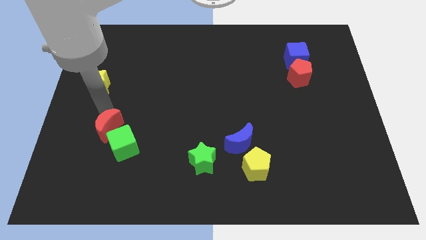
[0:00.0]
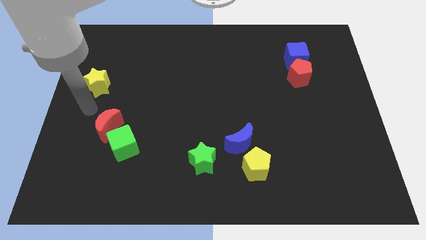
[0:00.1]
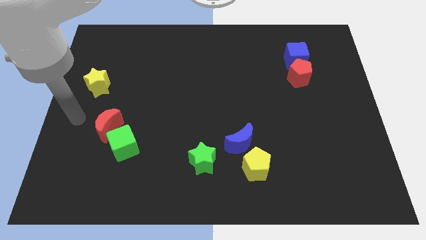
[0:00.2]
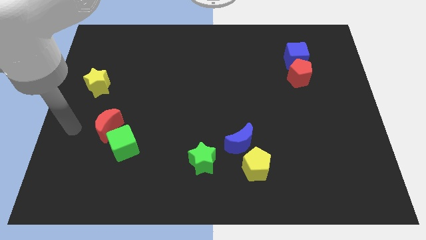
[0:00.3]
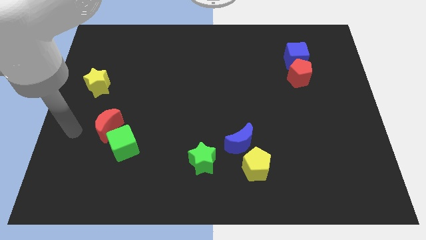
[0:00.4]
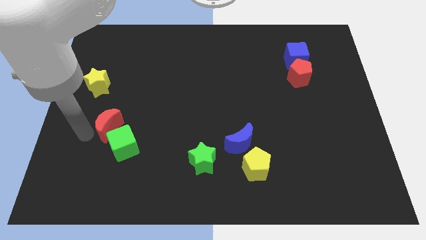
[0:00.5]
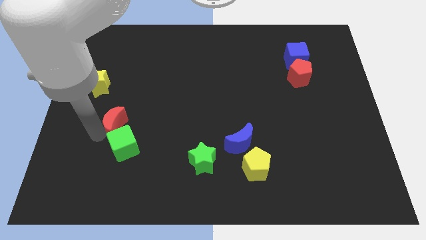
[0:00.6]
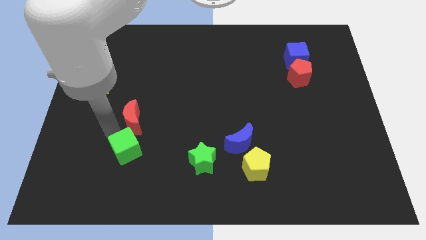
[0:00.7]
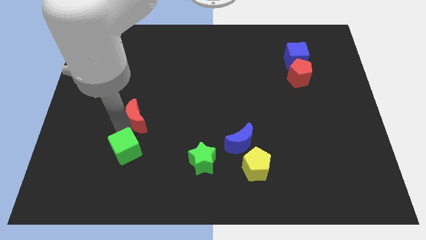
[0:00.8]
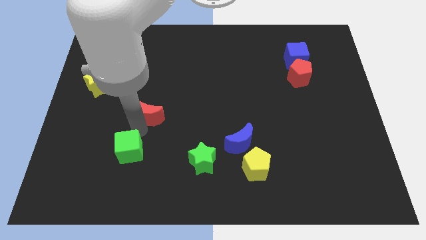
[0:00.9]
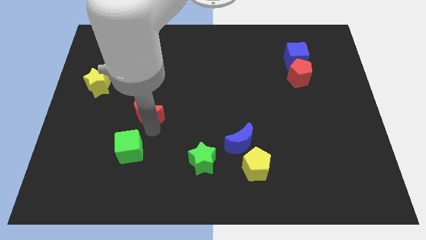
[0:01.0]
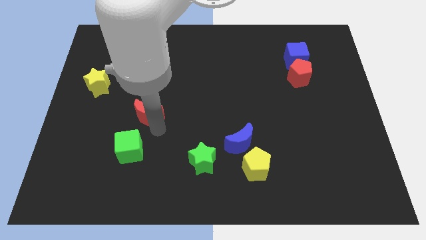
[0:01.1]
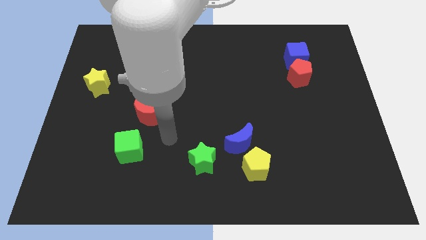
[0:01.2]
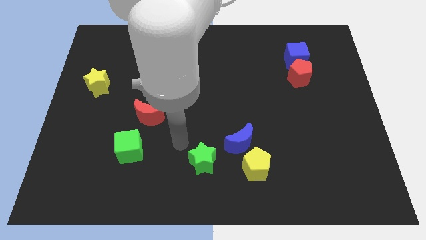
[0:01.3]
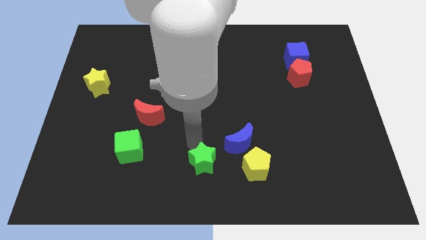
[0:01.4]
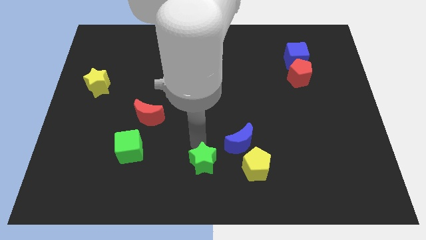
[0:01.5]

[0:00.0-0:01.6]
move red moon away from green cube

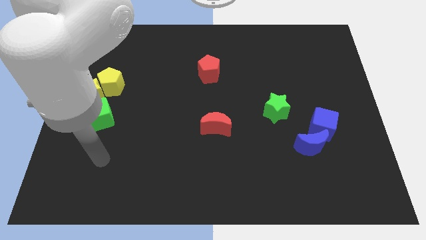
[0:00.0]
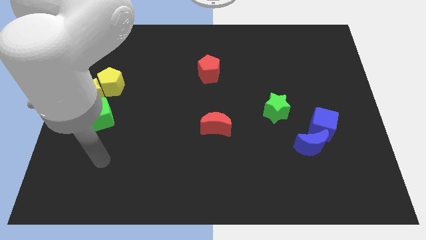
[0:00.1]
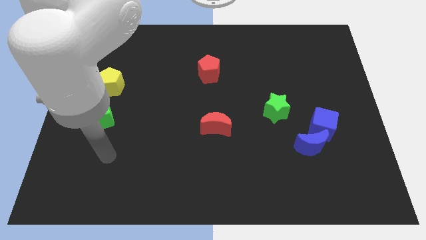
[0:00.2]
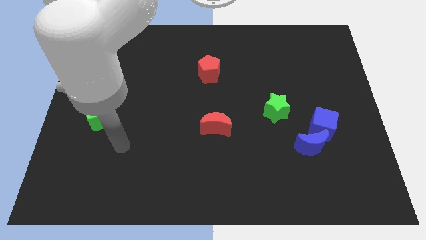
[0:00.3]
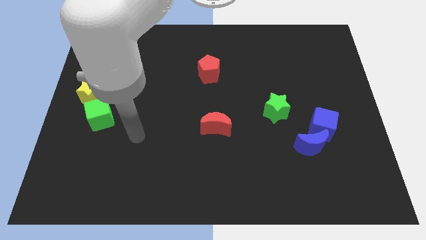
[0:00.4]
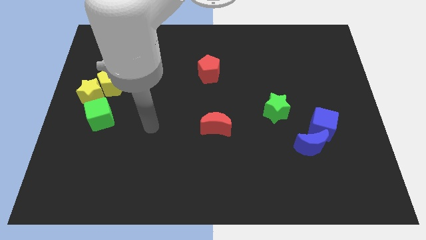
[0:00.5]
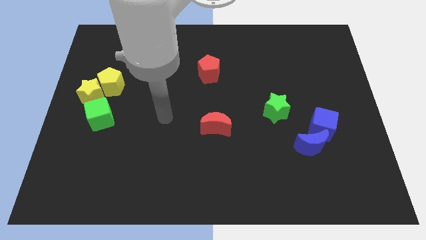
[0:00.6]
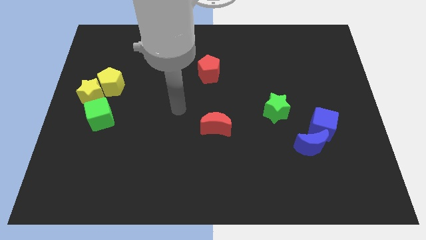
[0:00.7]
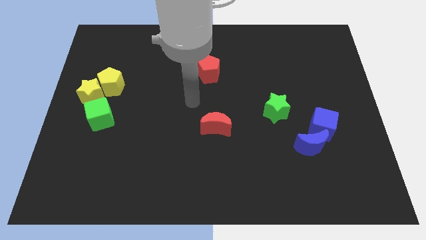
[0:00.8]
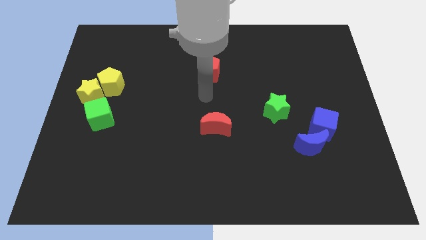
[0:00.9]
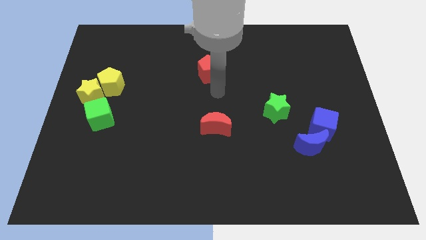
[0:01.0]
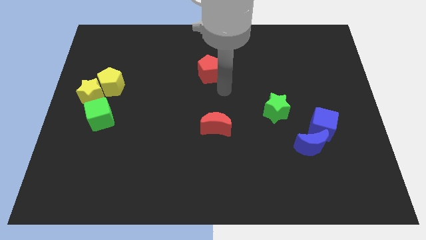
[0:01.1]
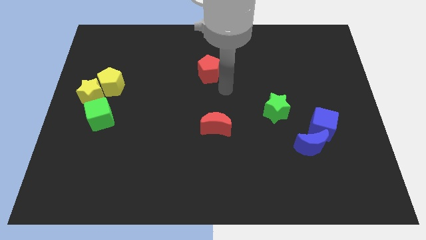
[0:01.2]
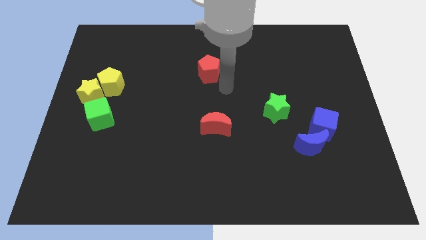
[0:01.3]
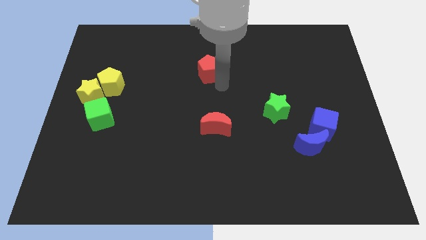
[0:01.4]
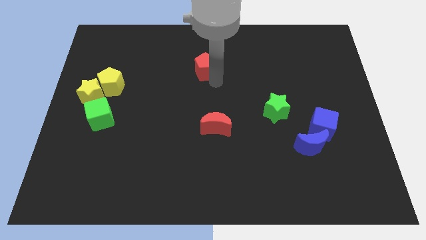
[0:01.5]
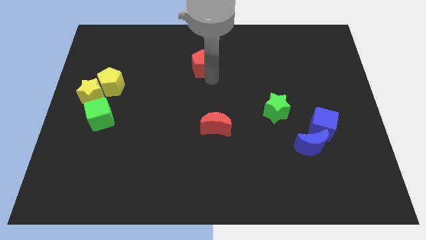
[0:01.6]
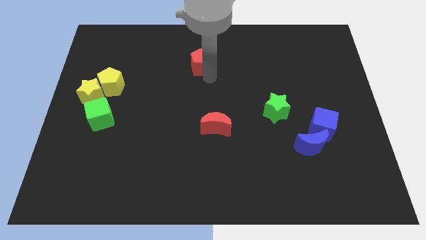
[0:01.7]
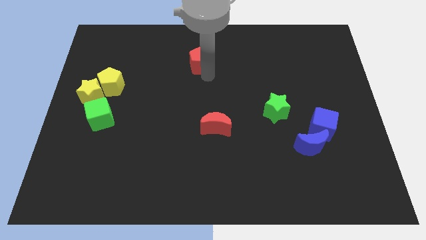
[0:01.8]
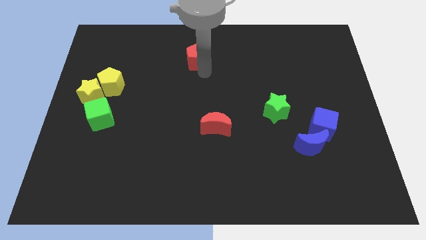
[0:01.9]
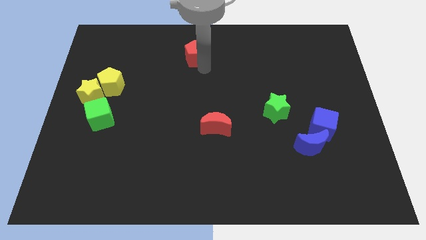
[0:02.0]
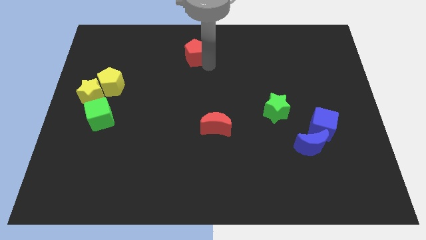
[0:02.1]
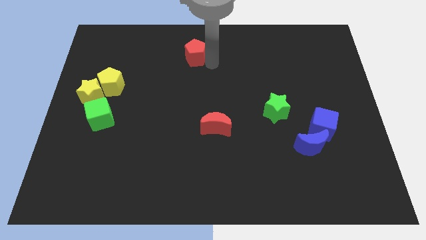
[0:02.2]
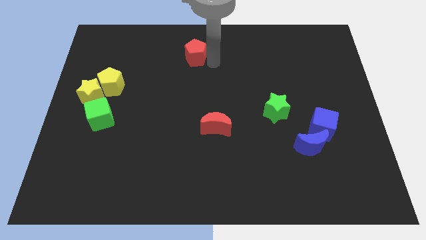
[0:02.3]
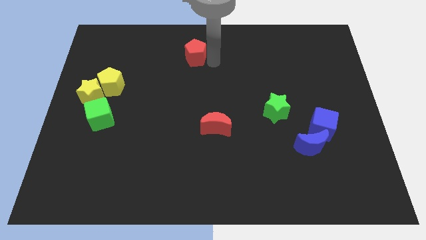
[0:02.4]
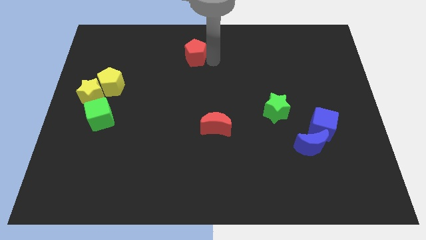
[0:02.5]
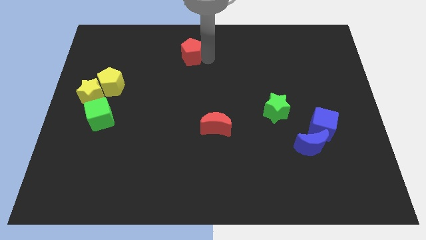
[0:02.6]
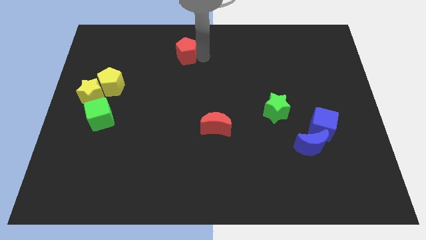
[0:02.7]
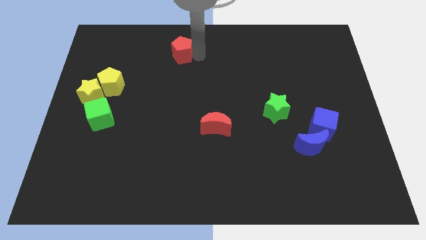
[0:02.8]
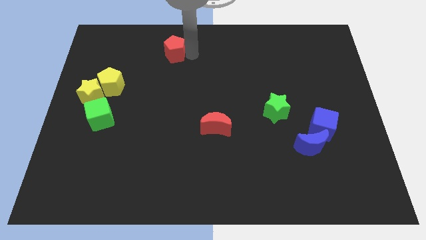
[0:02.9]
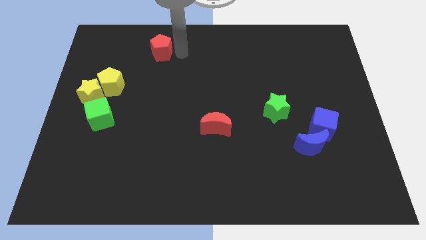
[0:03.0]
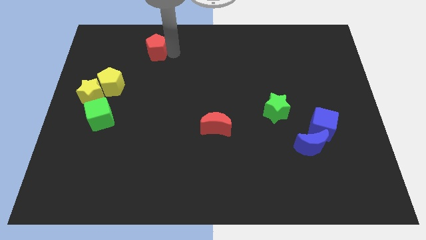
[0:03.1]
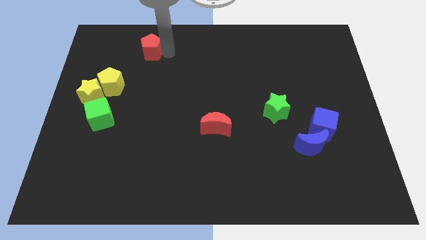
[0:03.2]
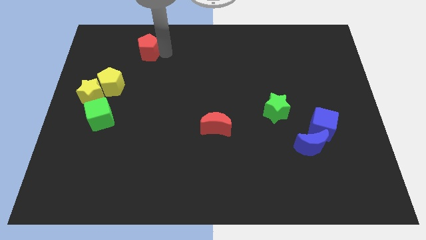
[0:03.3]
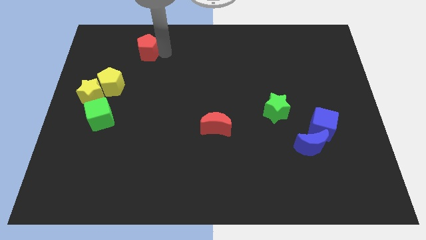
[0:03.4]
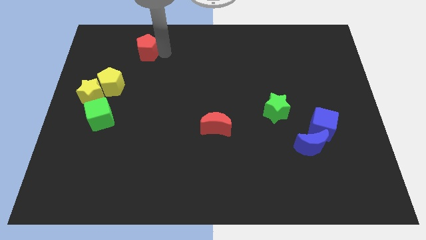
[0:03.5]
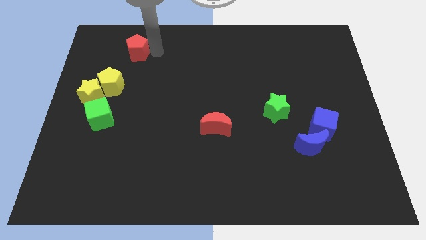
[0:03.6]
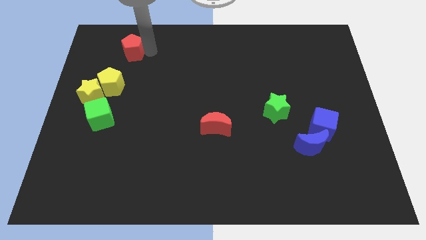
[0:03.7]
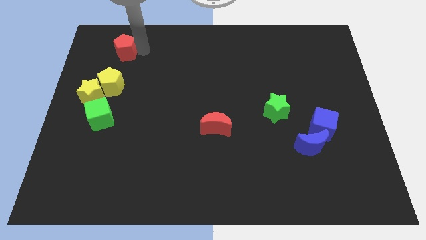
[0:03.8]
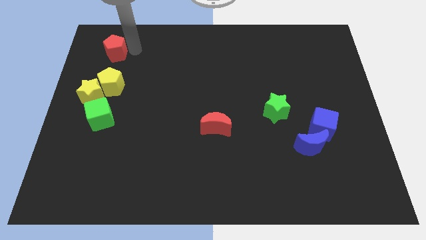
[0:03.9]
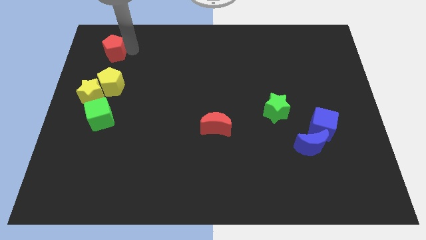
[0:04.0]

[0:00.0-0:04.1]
place the red pentagon above the yellow pentagon

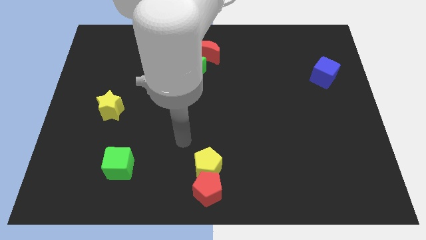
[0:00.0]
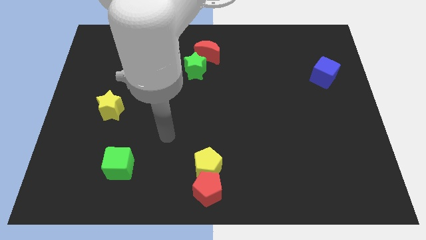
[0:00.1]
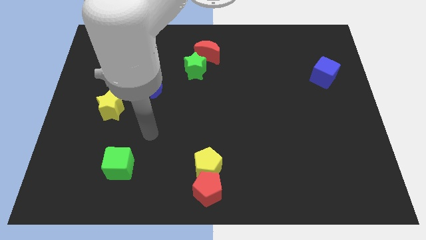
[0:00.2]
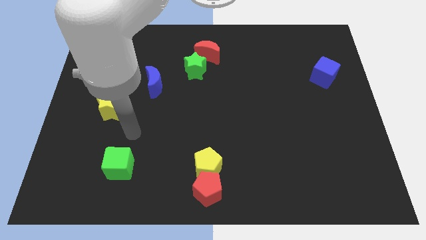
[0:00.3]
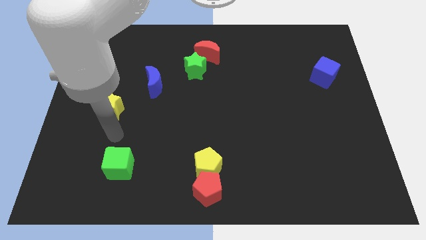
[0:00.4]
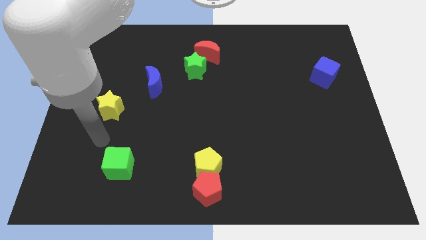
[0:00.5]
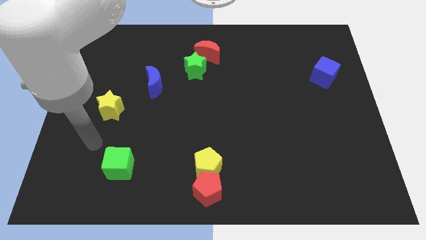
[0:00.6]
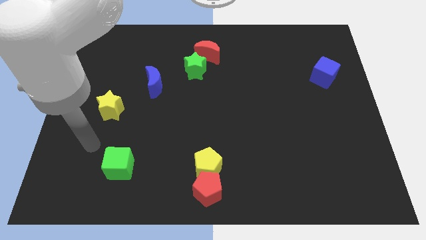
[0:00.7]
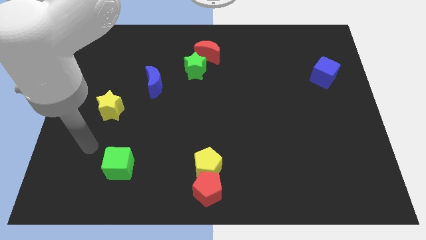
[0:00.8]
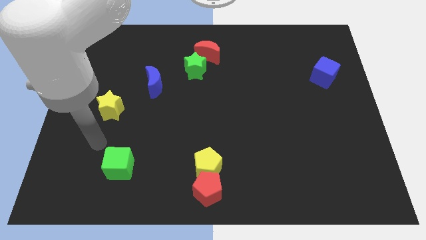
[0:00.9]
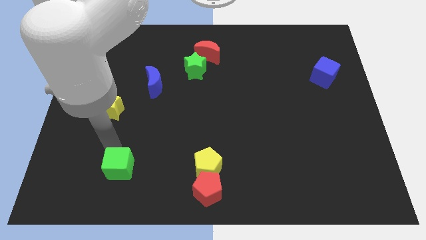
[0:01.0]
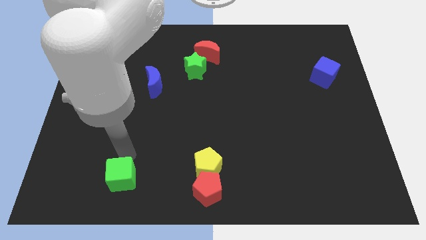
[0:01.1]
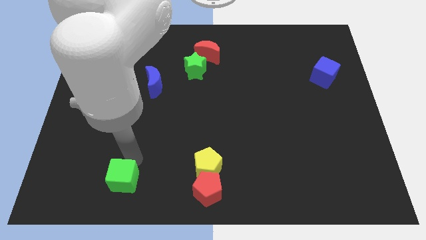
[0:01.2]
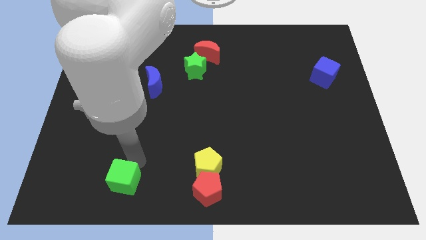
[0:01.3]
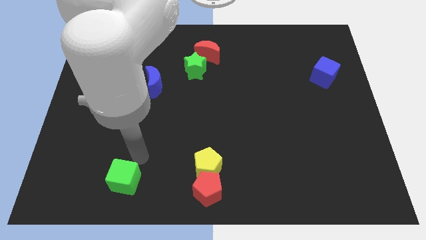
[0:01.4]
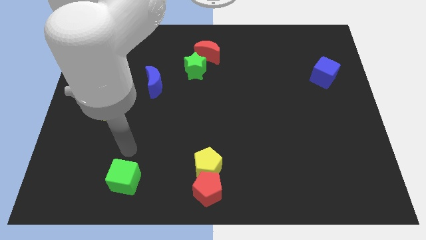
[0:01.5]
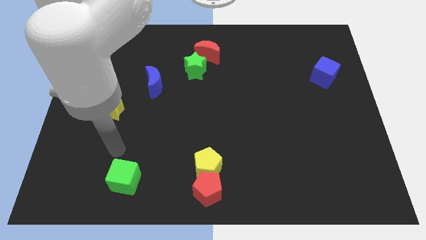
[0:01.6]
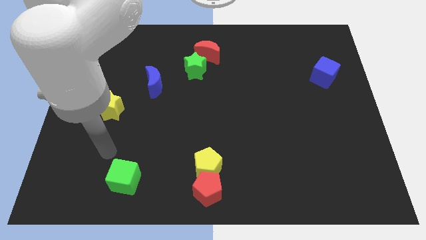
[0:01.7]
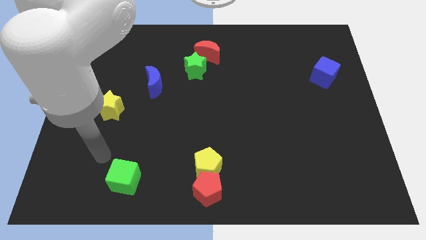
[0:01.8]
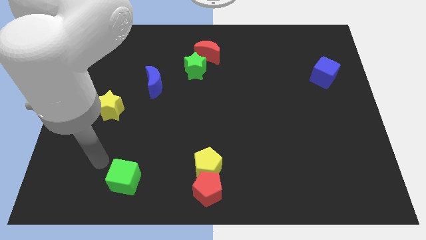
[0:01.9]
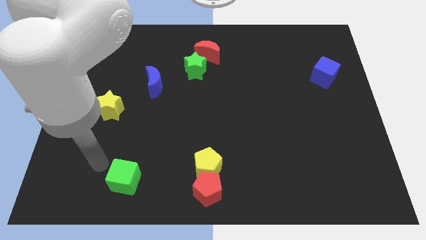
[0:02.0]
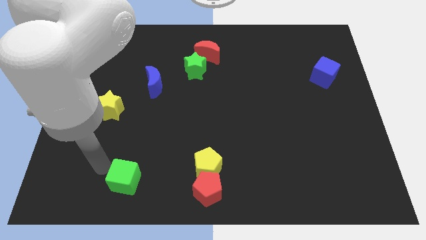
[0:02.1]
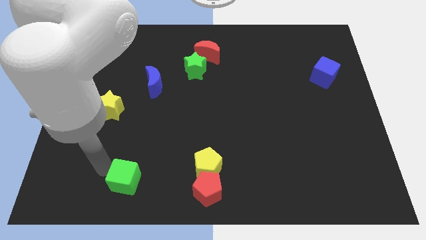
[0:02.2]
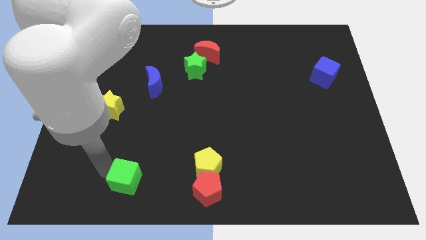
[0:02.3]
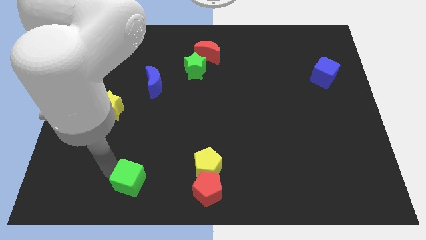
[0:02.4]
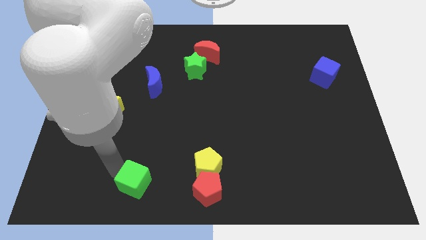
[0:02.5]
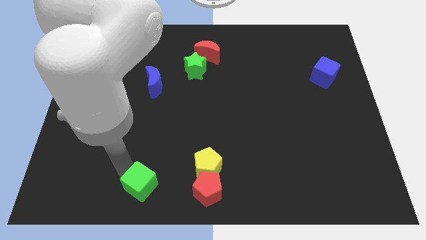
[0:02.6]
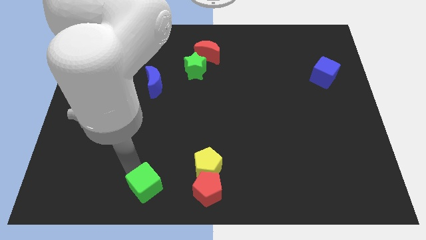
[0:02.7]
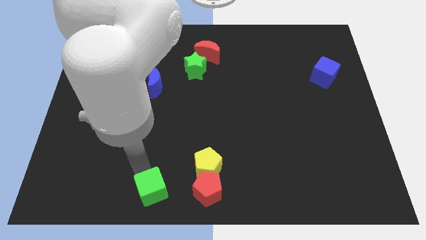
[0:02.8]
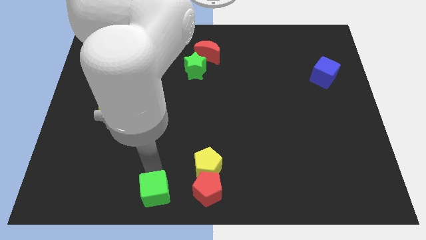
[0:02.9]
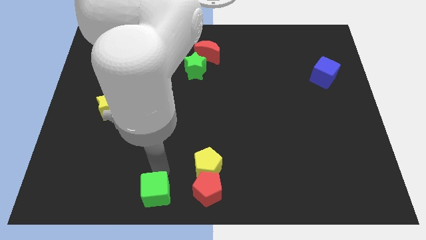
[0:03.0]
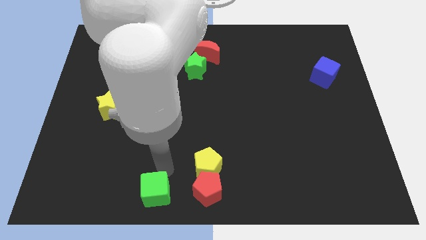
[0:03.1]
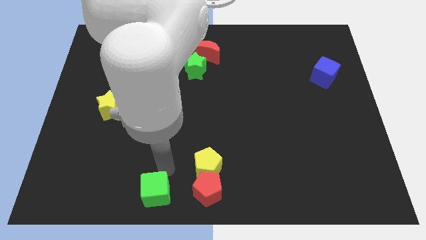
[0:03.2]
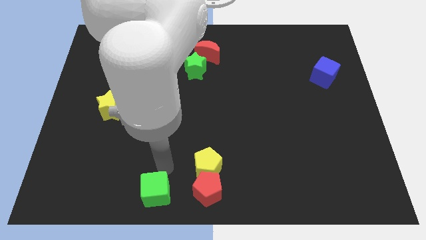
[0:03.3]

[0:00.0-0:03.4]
move the green cube to the left of the red pentagon
